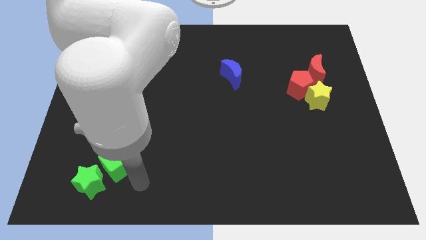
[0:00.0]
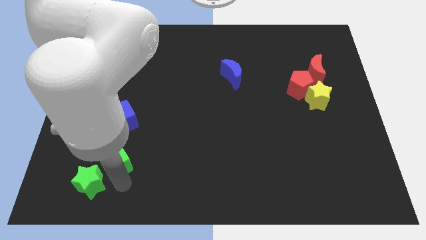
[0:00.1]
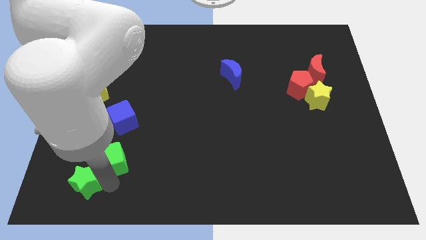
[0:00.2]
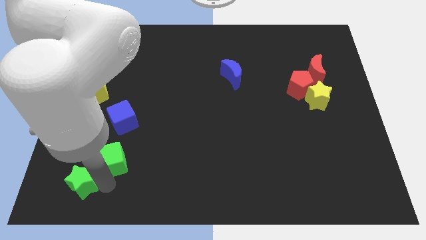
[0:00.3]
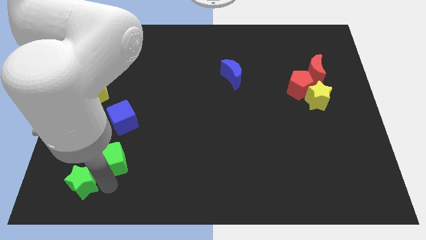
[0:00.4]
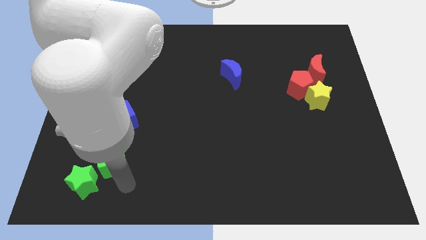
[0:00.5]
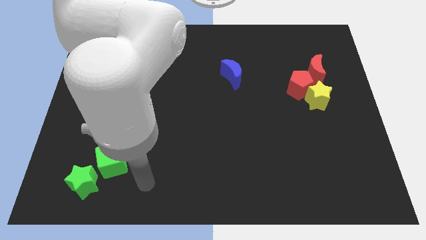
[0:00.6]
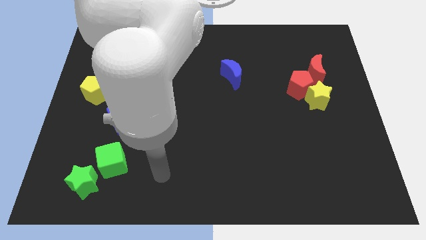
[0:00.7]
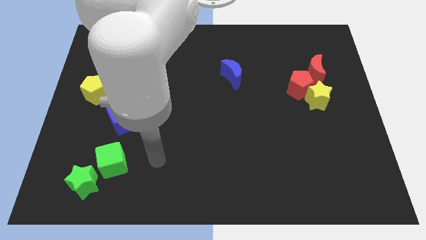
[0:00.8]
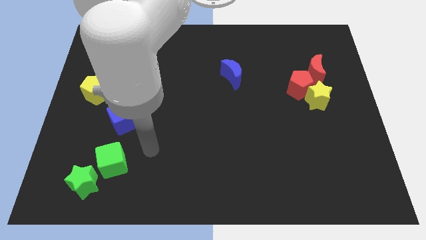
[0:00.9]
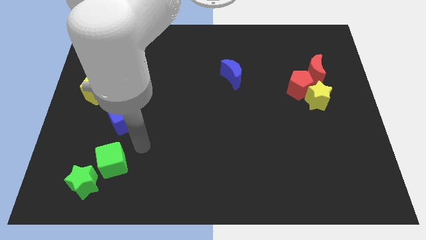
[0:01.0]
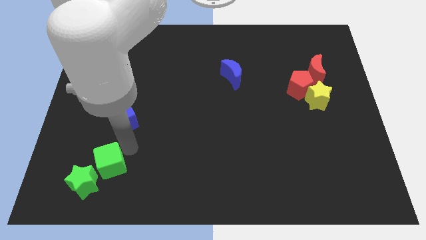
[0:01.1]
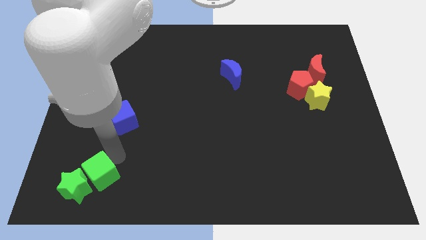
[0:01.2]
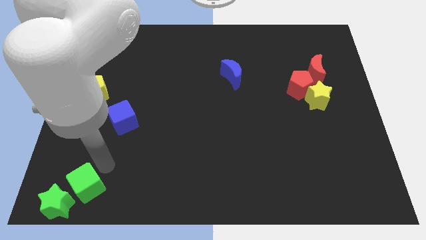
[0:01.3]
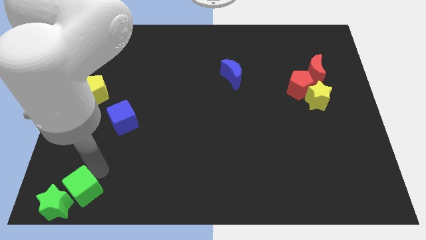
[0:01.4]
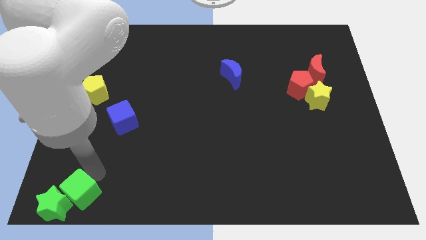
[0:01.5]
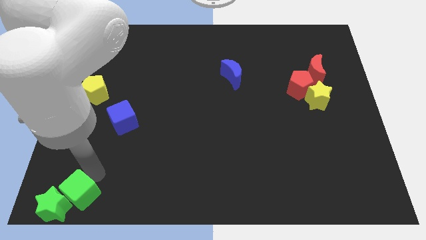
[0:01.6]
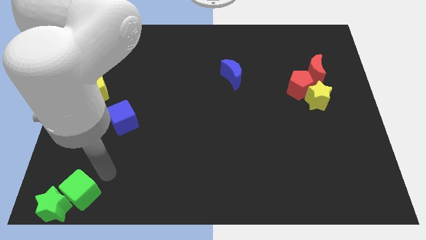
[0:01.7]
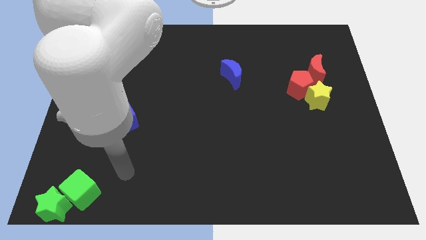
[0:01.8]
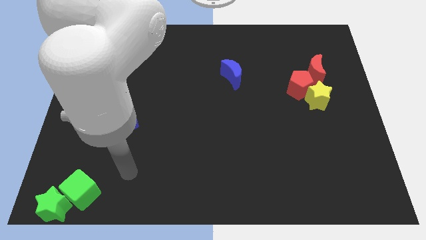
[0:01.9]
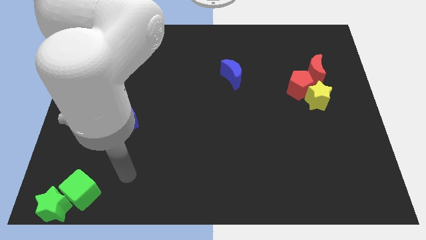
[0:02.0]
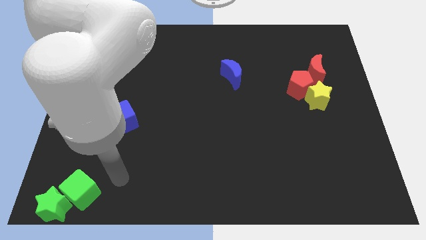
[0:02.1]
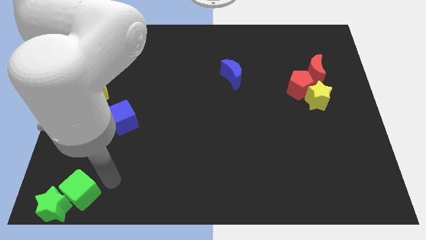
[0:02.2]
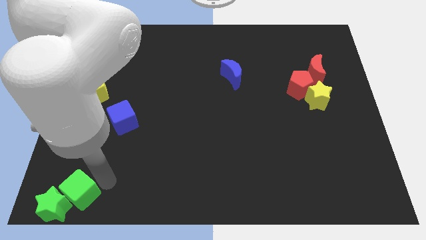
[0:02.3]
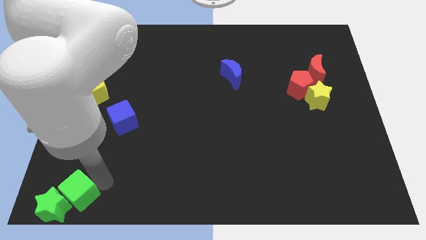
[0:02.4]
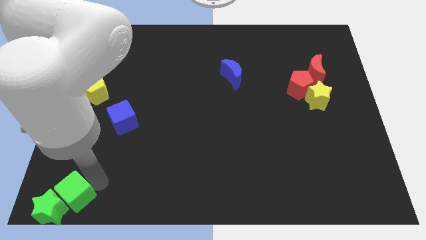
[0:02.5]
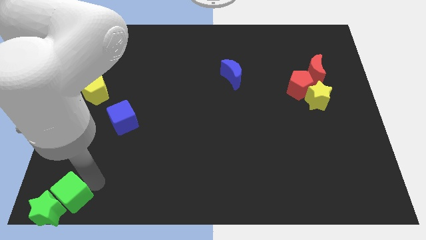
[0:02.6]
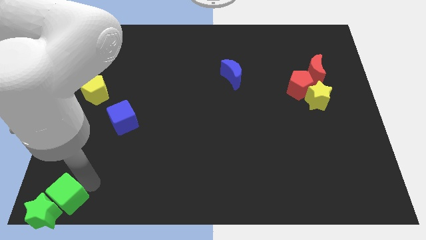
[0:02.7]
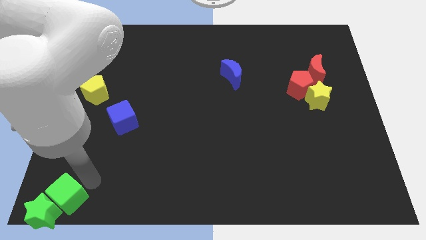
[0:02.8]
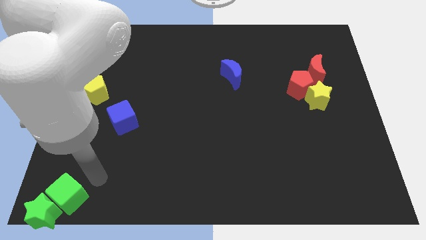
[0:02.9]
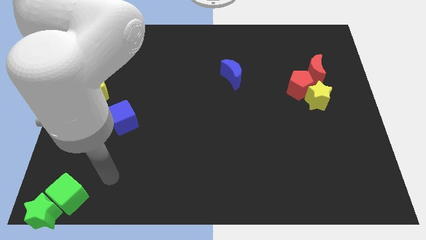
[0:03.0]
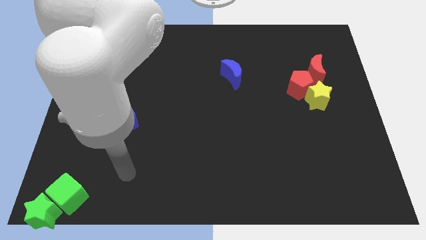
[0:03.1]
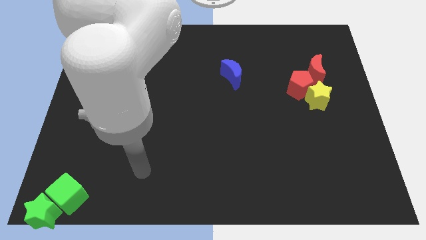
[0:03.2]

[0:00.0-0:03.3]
move green blocks to the bottom left corner of the board

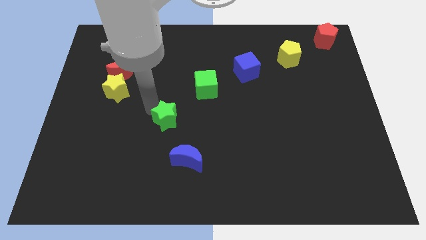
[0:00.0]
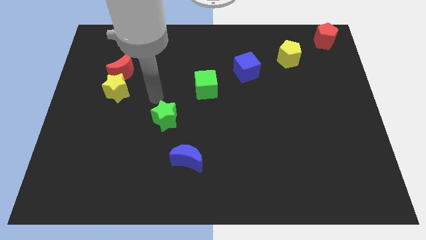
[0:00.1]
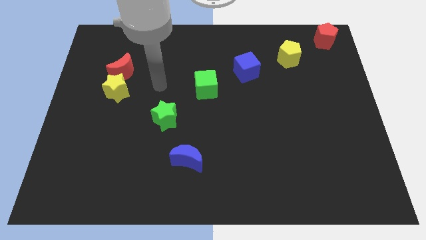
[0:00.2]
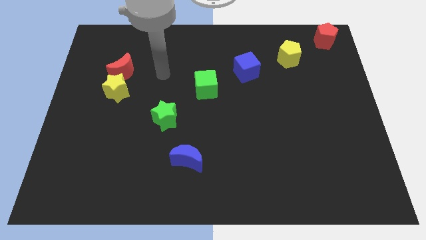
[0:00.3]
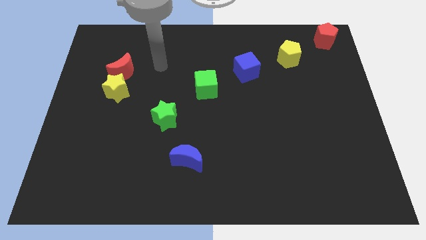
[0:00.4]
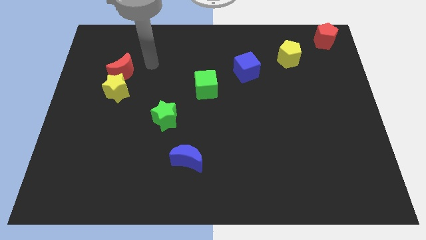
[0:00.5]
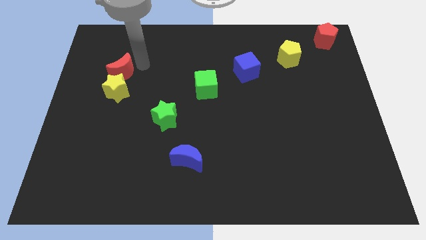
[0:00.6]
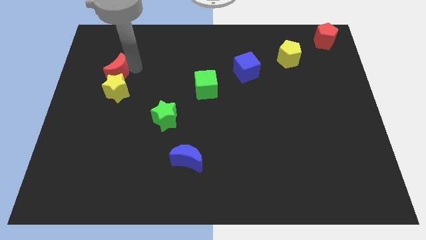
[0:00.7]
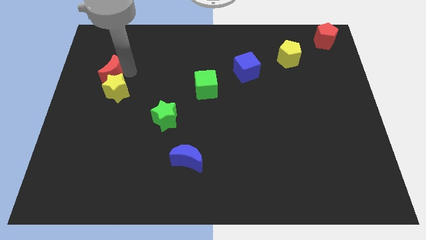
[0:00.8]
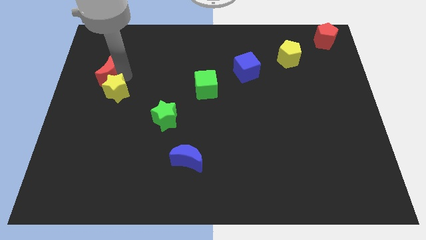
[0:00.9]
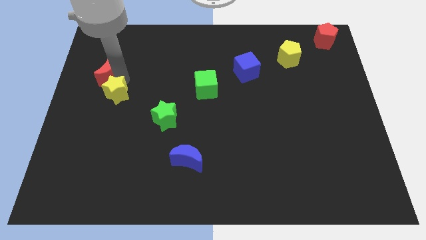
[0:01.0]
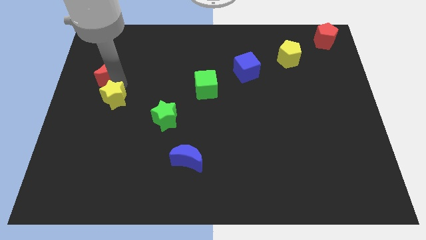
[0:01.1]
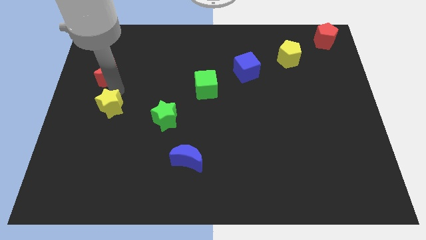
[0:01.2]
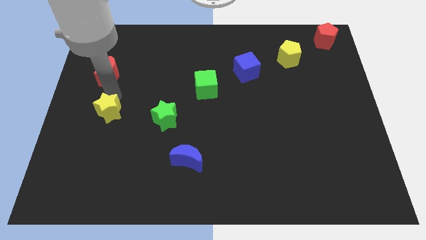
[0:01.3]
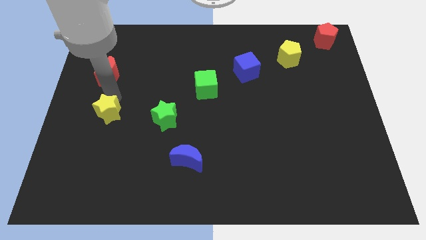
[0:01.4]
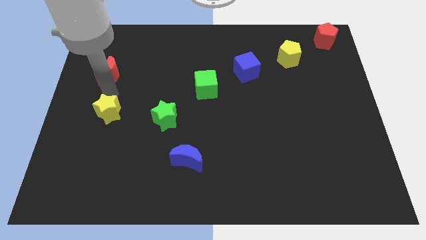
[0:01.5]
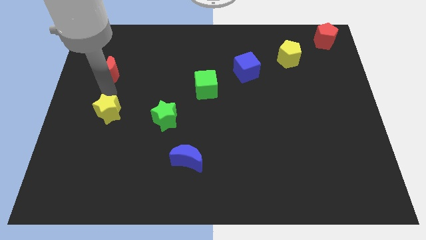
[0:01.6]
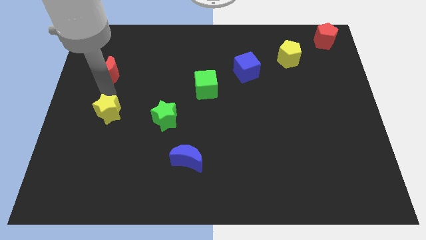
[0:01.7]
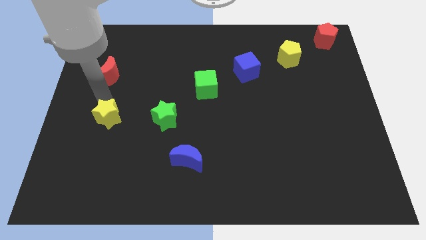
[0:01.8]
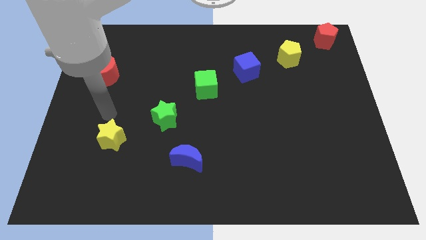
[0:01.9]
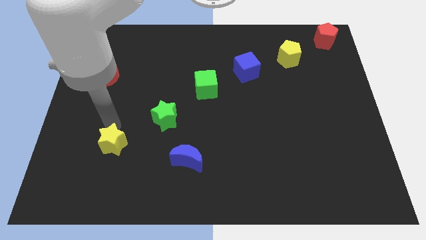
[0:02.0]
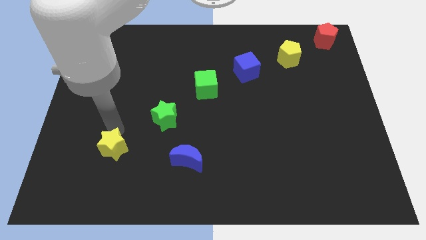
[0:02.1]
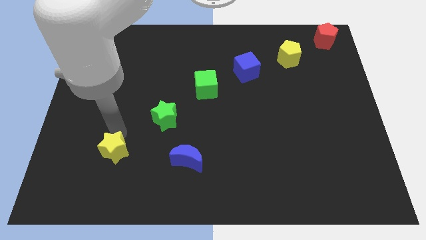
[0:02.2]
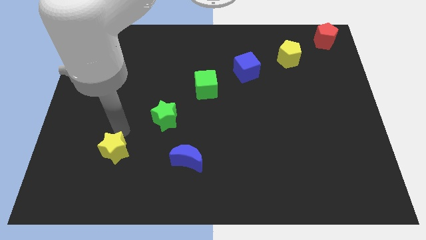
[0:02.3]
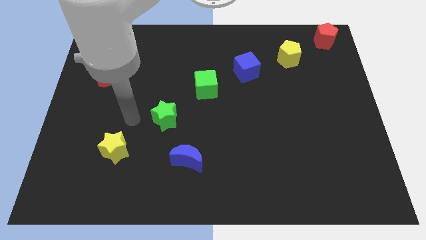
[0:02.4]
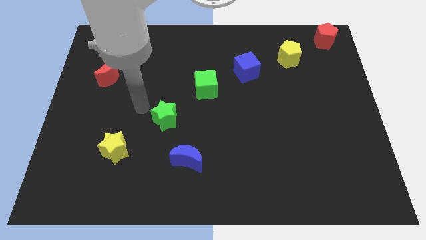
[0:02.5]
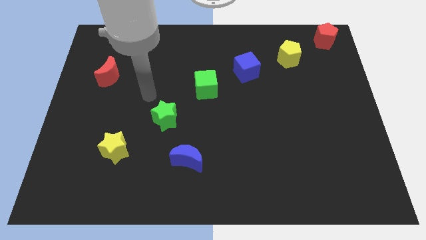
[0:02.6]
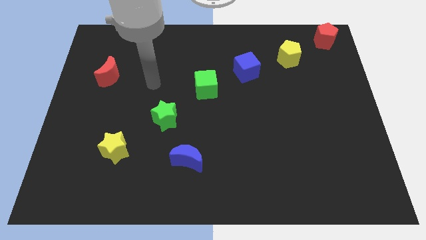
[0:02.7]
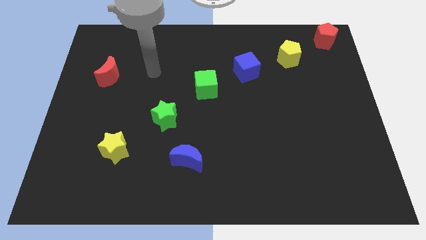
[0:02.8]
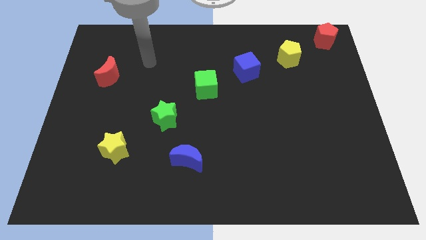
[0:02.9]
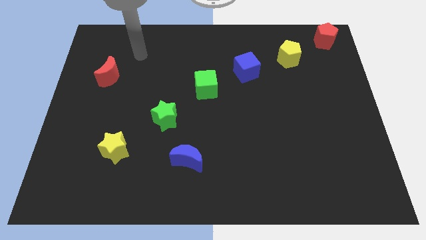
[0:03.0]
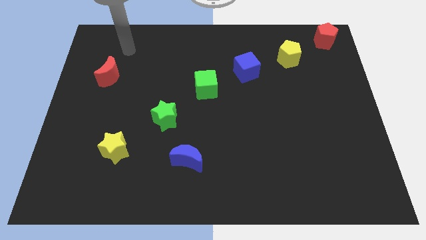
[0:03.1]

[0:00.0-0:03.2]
drag the yellow star diagonally bottom left of the green star

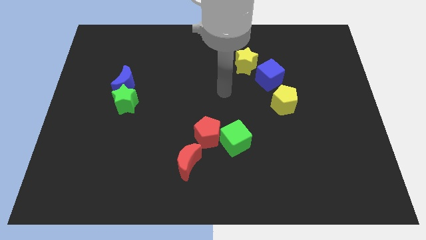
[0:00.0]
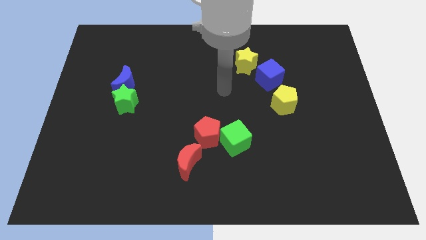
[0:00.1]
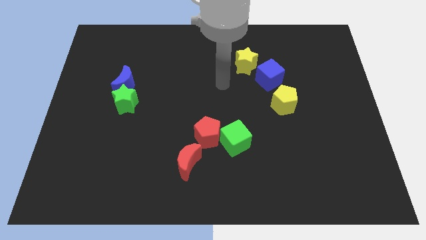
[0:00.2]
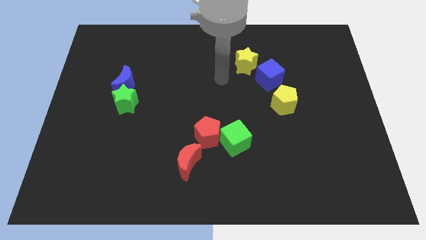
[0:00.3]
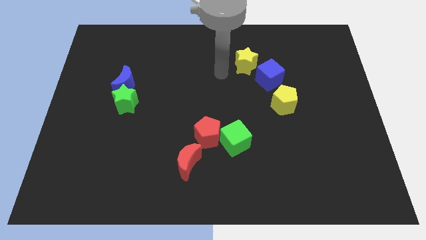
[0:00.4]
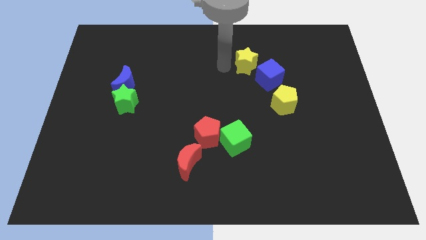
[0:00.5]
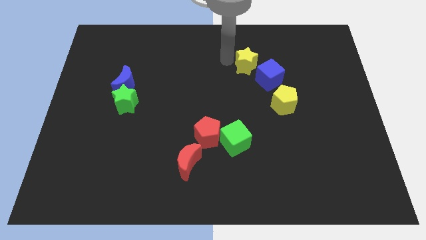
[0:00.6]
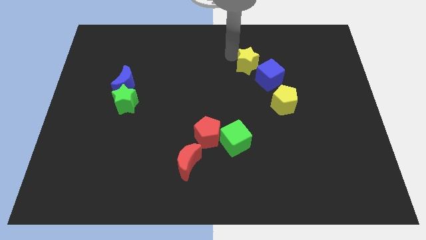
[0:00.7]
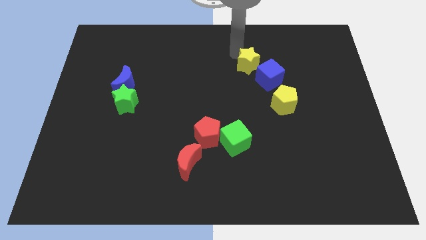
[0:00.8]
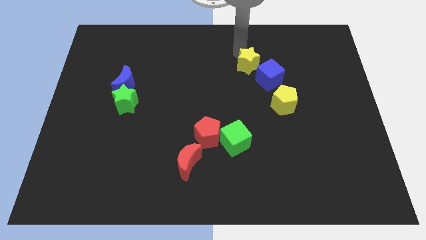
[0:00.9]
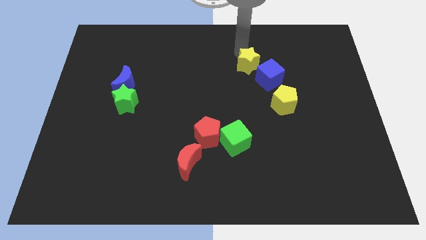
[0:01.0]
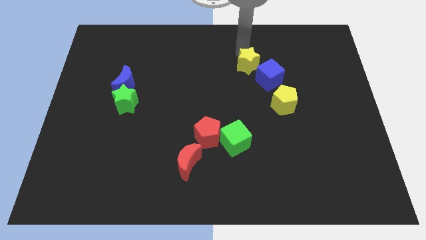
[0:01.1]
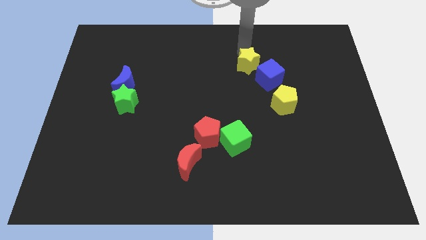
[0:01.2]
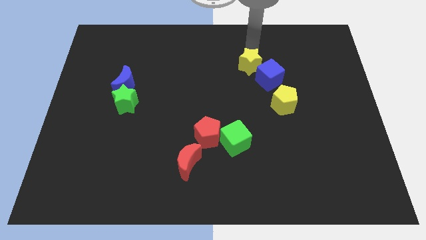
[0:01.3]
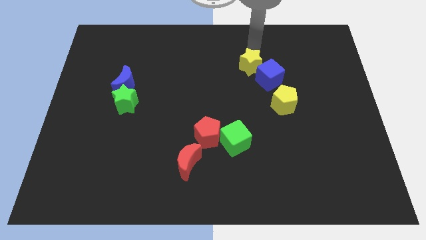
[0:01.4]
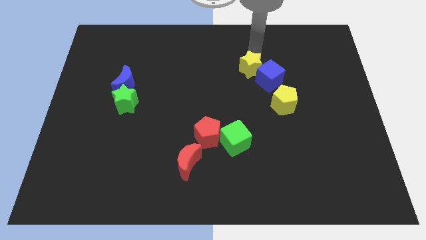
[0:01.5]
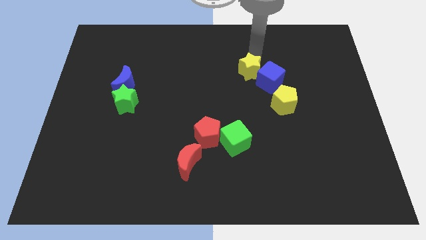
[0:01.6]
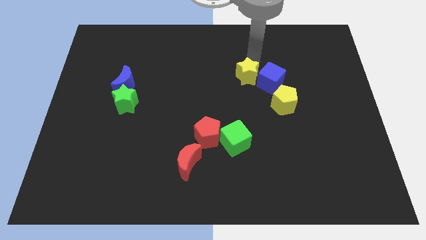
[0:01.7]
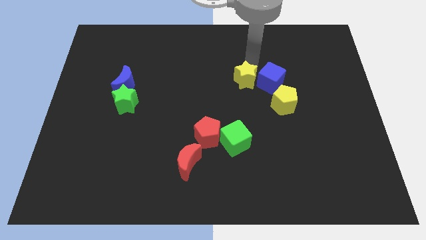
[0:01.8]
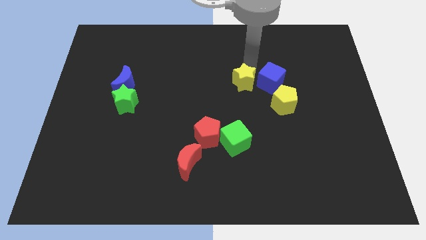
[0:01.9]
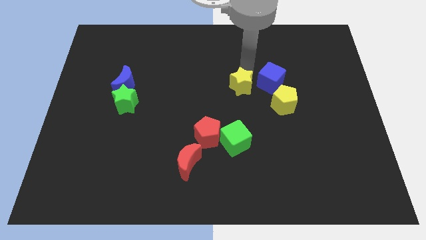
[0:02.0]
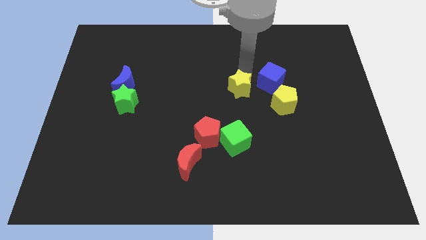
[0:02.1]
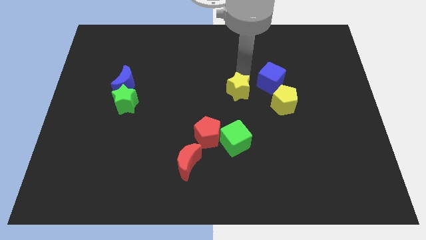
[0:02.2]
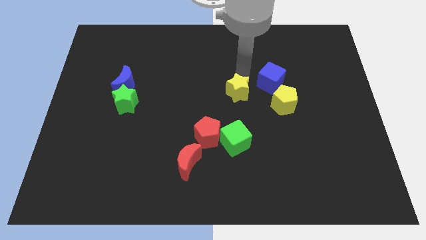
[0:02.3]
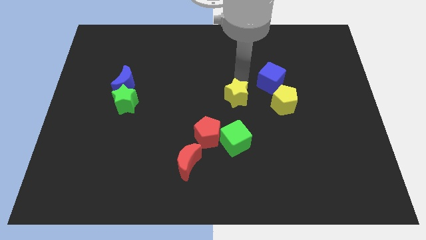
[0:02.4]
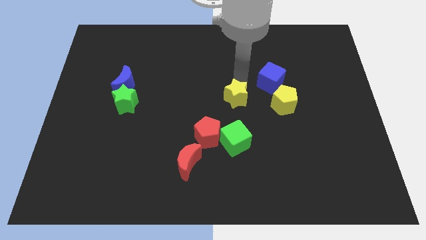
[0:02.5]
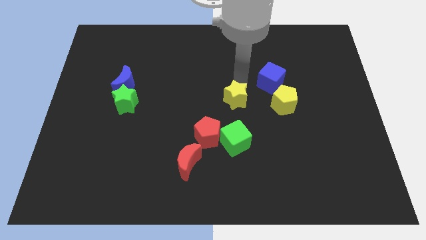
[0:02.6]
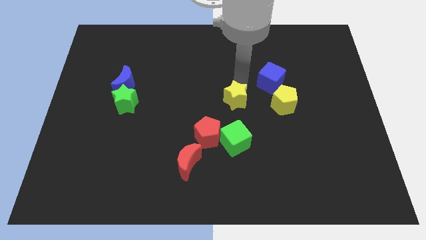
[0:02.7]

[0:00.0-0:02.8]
push the yellow star to the left of the yellow pentagon
